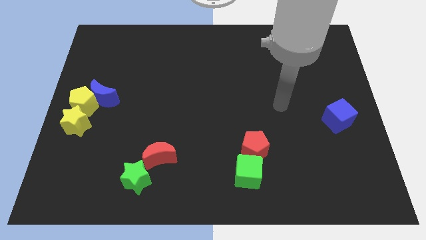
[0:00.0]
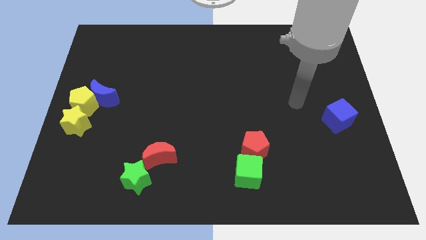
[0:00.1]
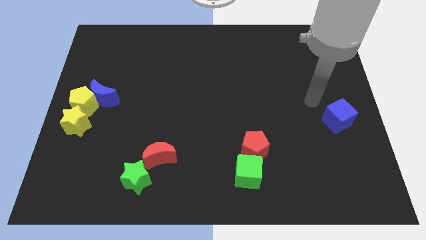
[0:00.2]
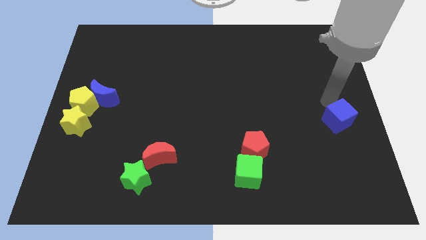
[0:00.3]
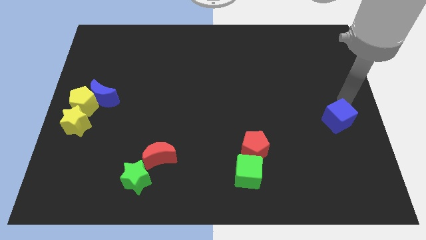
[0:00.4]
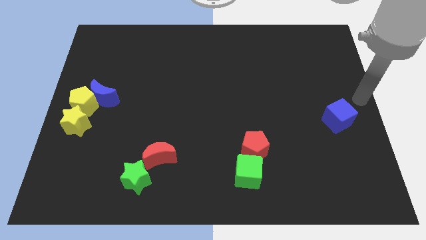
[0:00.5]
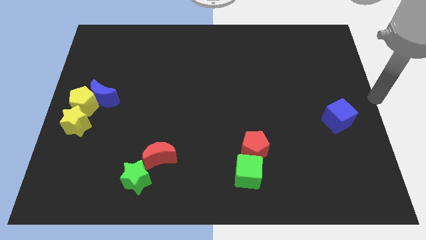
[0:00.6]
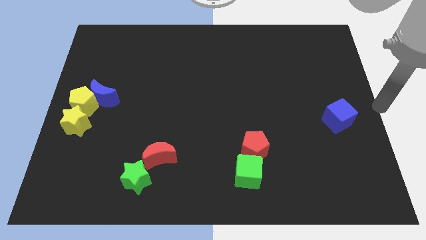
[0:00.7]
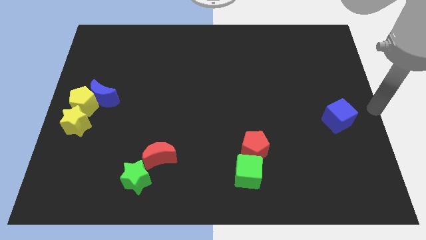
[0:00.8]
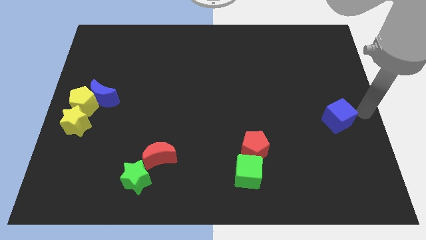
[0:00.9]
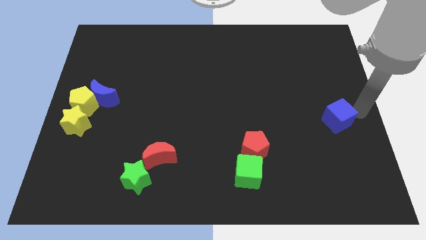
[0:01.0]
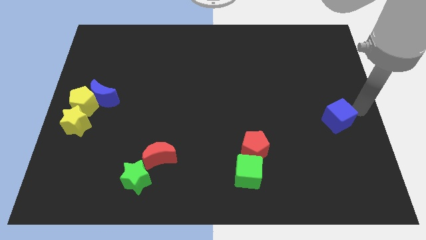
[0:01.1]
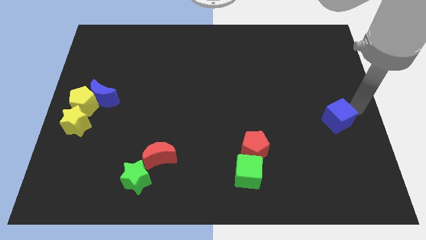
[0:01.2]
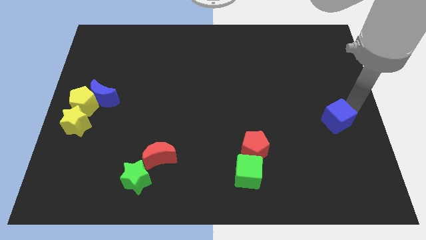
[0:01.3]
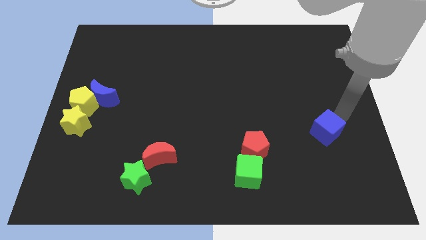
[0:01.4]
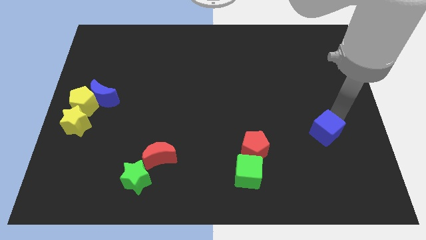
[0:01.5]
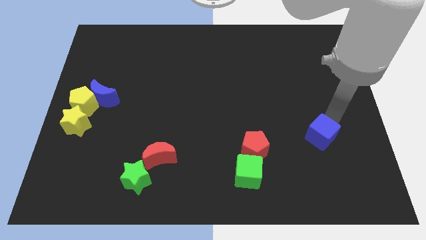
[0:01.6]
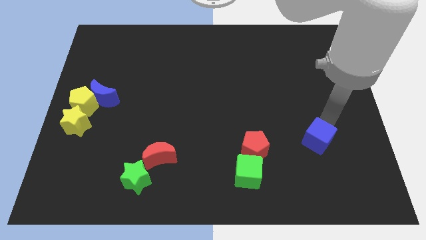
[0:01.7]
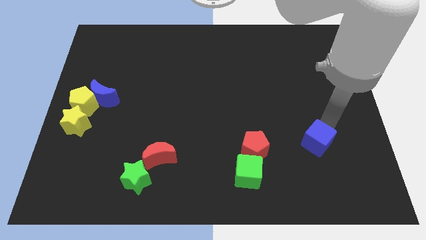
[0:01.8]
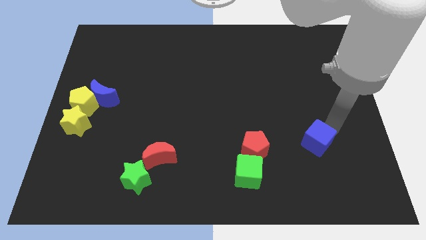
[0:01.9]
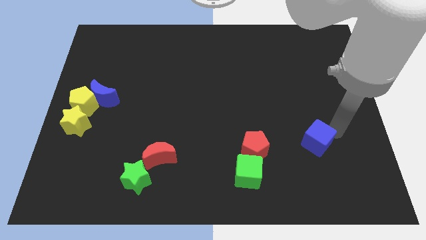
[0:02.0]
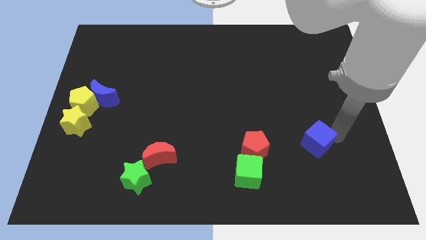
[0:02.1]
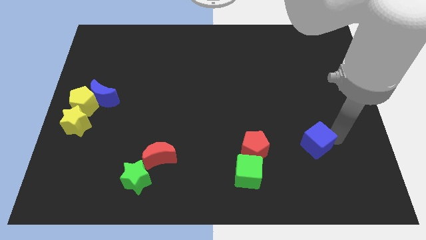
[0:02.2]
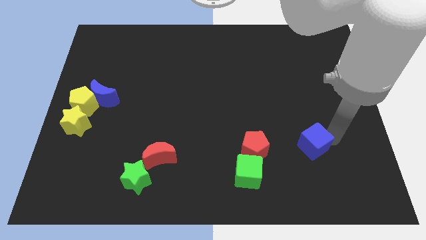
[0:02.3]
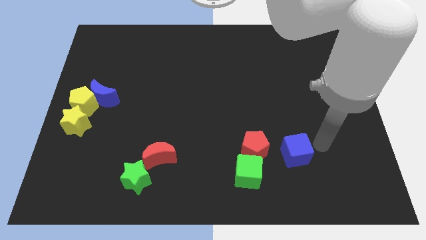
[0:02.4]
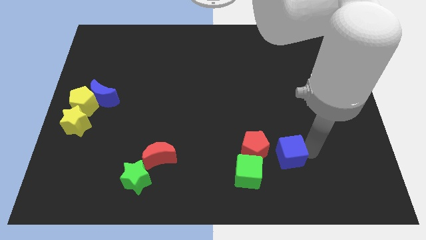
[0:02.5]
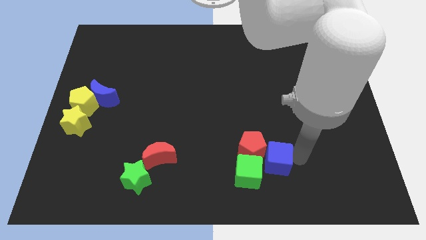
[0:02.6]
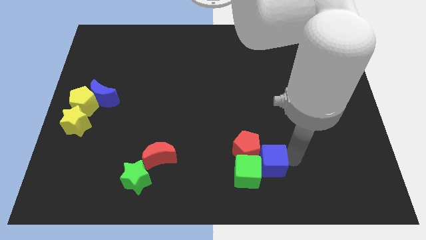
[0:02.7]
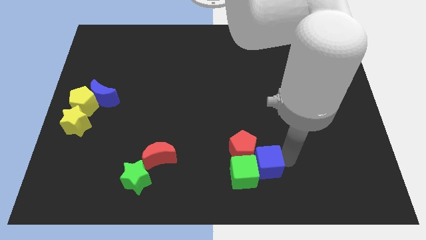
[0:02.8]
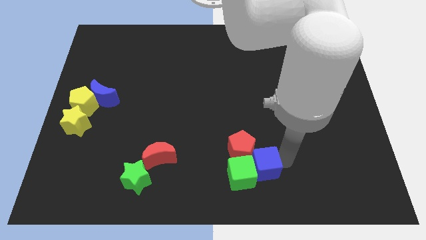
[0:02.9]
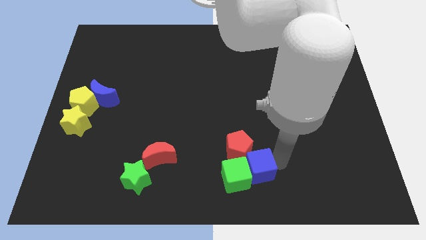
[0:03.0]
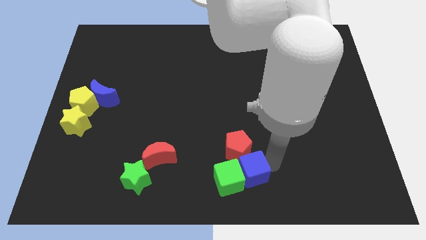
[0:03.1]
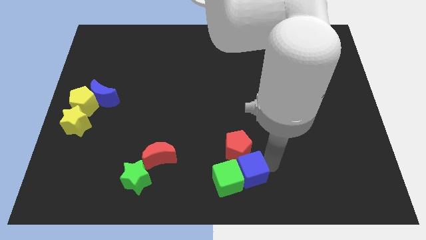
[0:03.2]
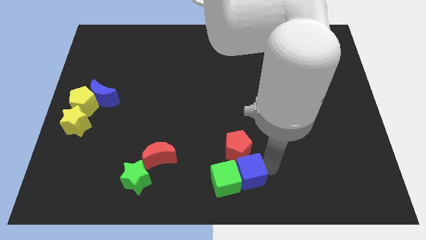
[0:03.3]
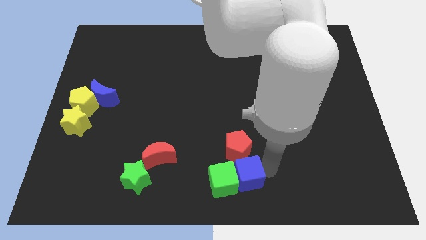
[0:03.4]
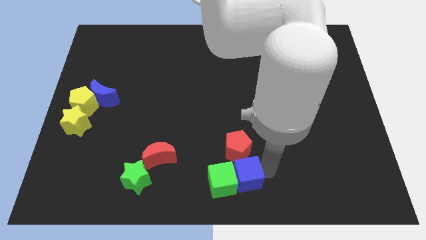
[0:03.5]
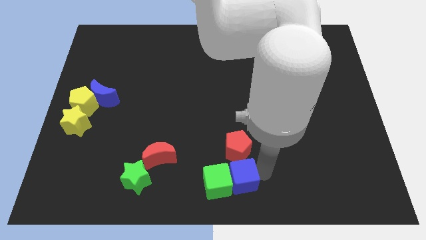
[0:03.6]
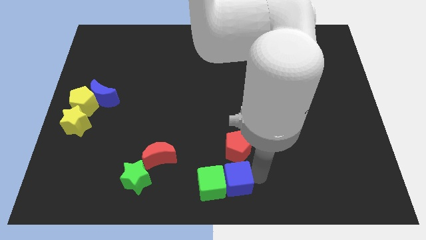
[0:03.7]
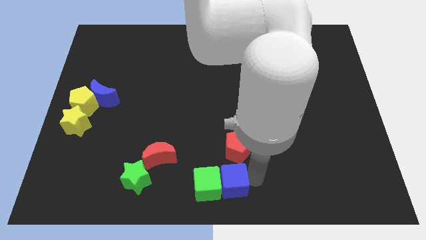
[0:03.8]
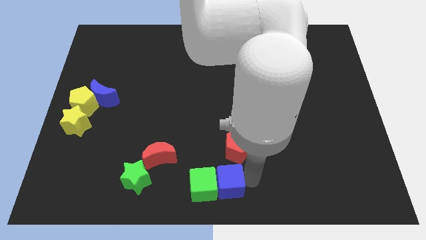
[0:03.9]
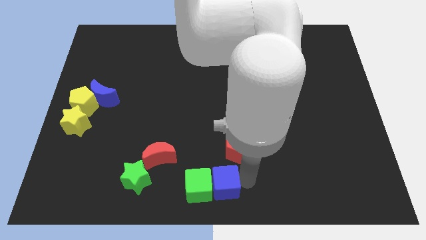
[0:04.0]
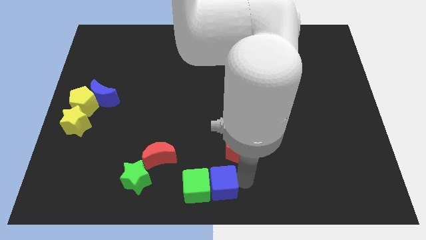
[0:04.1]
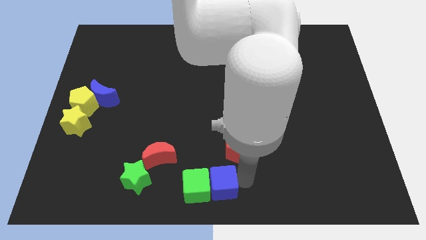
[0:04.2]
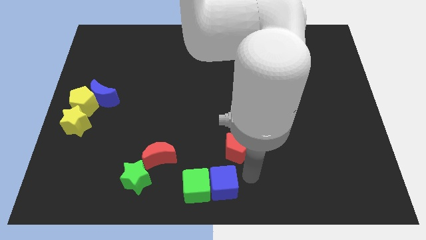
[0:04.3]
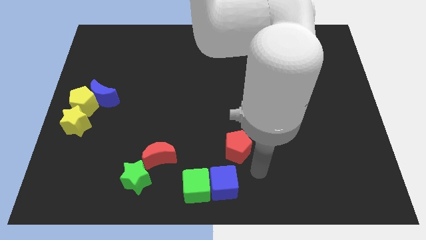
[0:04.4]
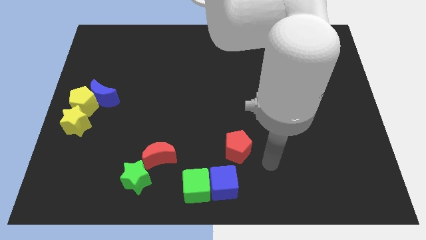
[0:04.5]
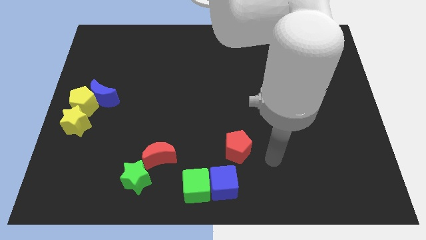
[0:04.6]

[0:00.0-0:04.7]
move blue and green cubes to the bottom center of the board

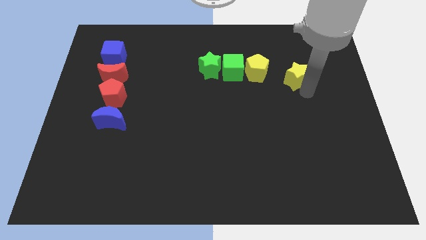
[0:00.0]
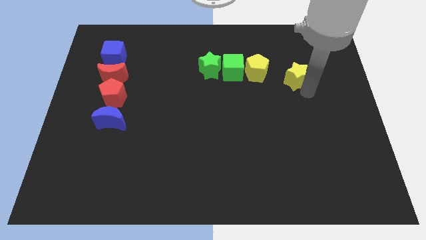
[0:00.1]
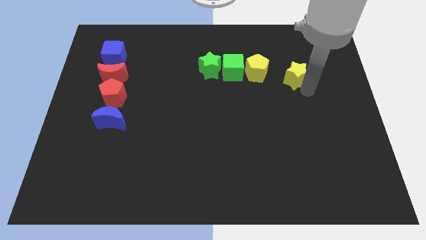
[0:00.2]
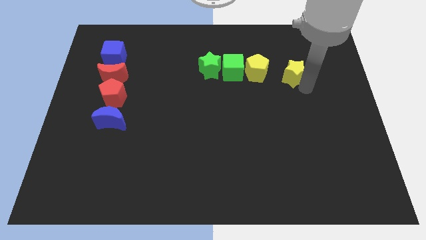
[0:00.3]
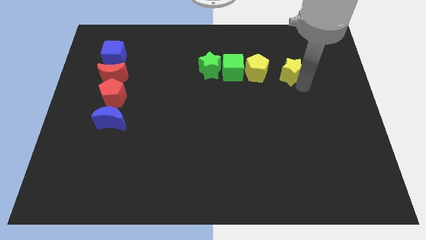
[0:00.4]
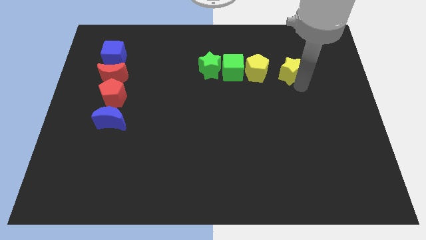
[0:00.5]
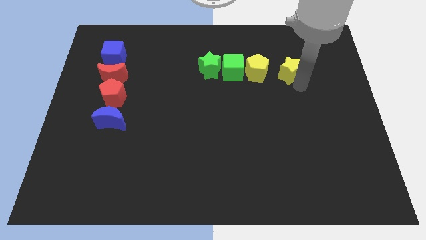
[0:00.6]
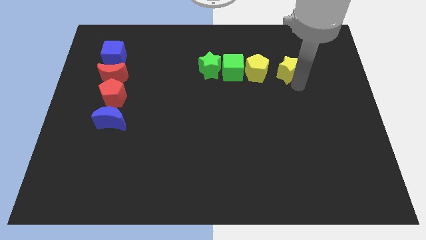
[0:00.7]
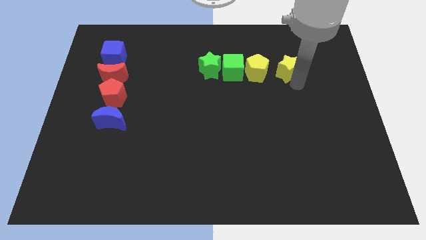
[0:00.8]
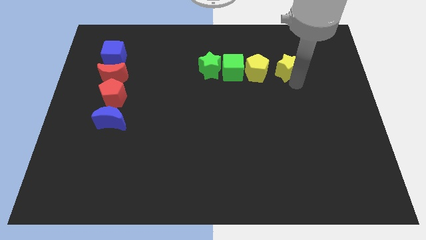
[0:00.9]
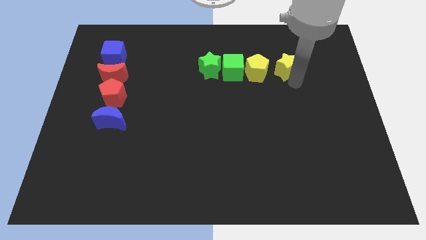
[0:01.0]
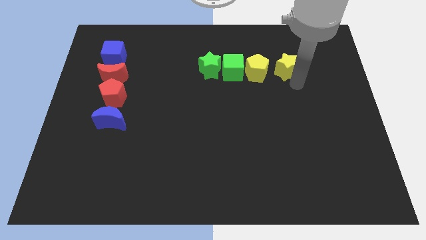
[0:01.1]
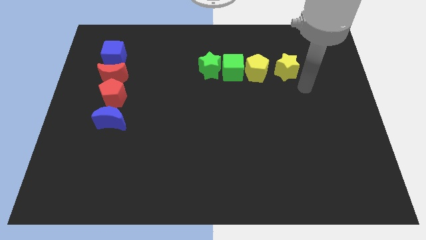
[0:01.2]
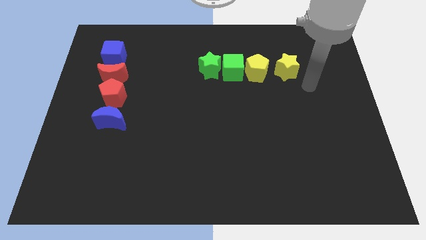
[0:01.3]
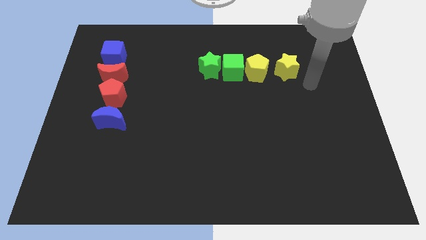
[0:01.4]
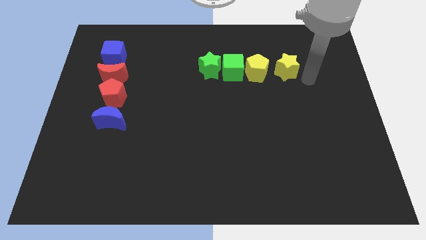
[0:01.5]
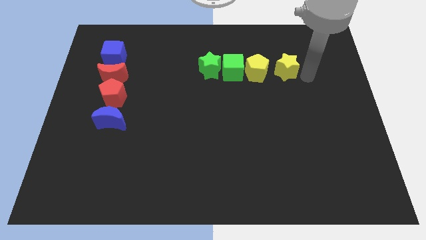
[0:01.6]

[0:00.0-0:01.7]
push the yellow star to the right of the yellow pentagon

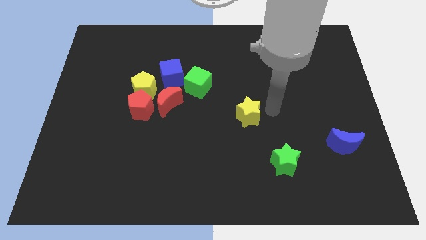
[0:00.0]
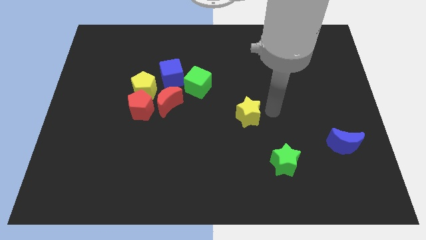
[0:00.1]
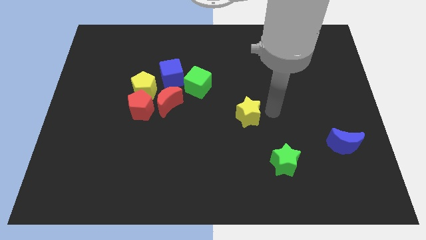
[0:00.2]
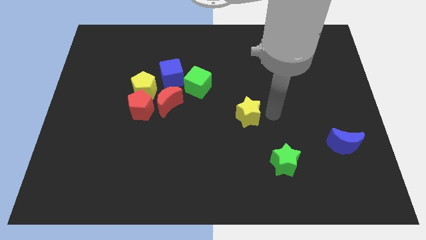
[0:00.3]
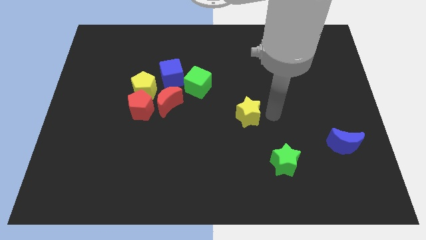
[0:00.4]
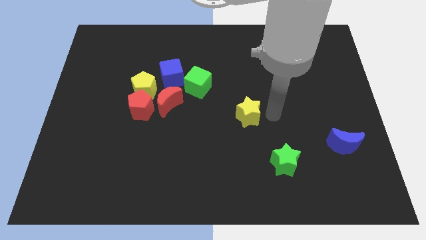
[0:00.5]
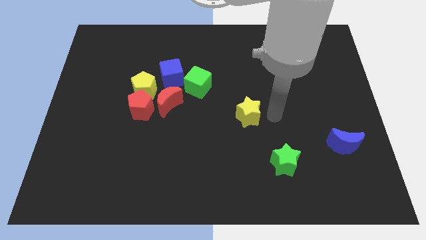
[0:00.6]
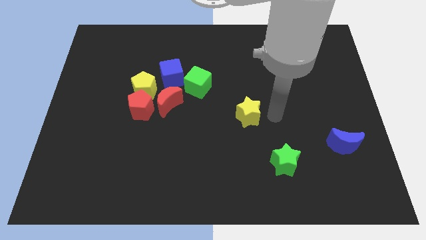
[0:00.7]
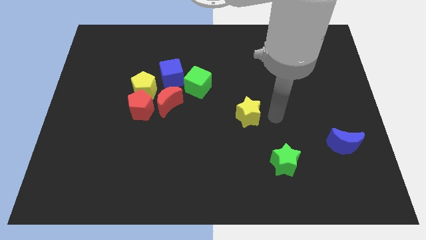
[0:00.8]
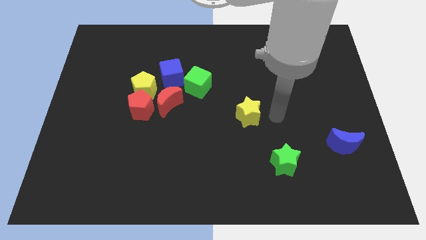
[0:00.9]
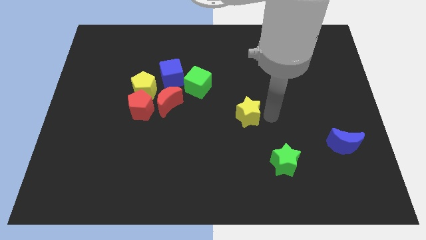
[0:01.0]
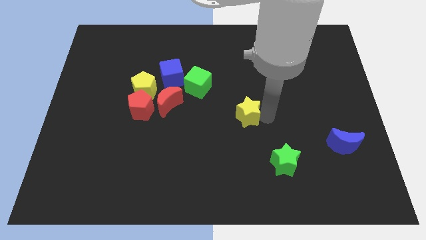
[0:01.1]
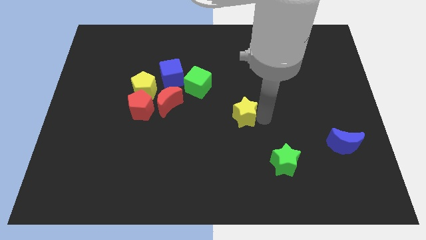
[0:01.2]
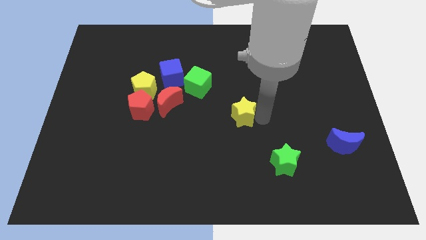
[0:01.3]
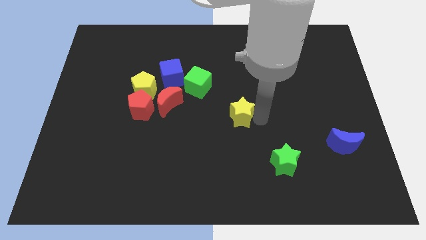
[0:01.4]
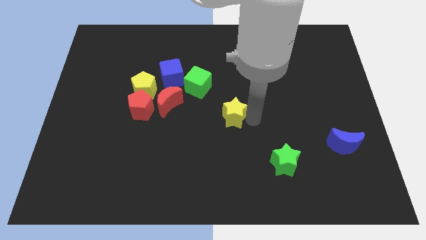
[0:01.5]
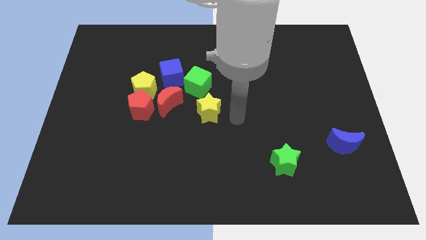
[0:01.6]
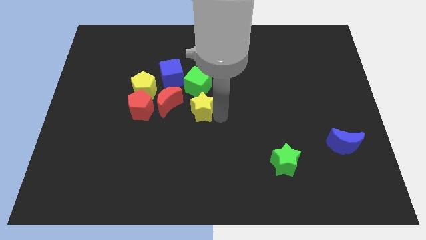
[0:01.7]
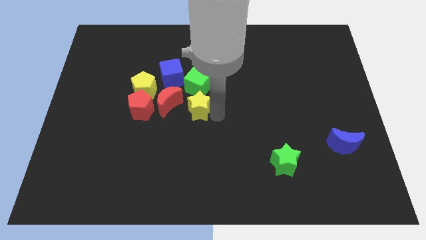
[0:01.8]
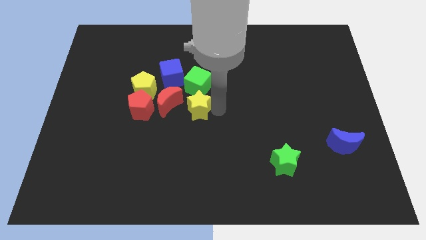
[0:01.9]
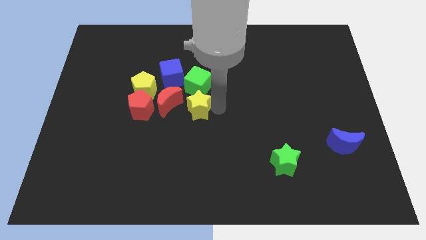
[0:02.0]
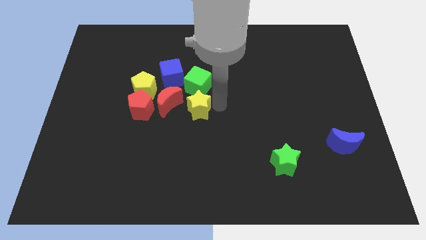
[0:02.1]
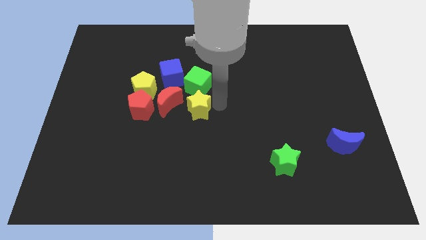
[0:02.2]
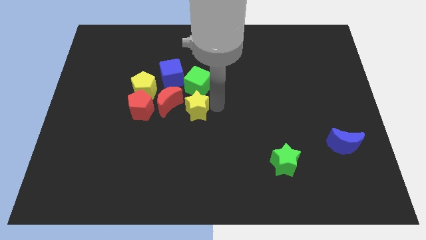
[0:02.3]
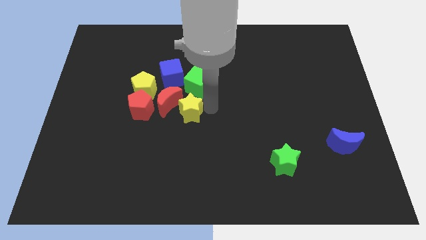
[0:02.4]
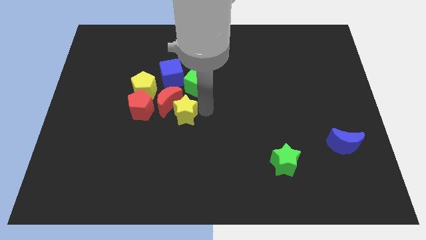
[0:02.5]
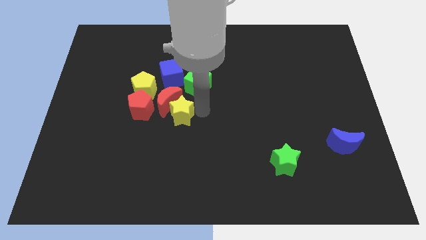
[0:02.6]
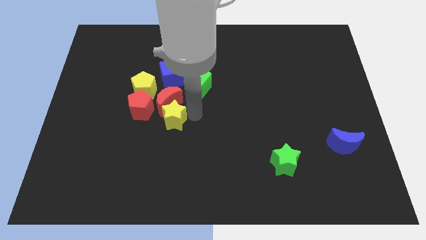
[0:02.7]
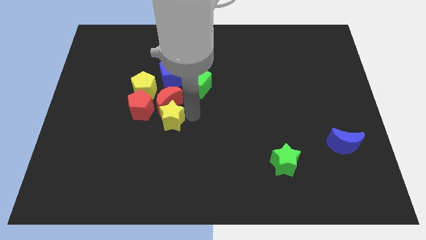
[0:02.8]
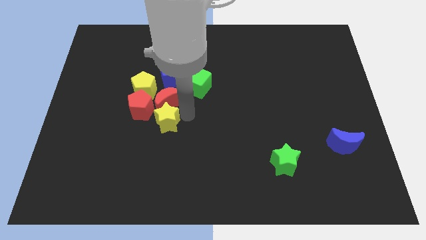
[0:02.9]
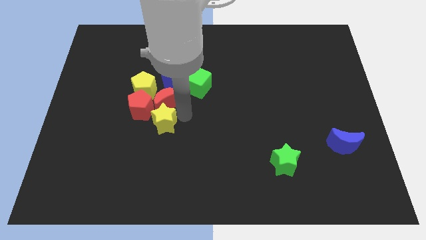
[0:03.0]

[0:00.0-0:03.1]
push the yellow star in to red crescent
